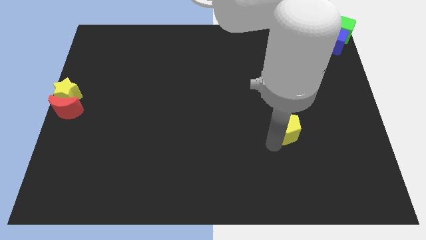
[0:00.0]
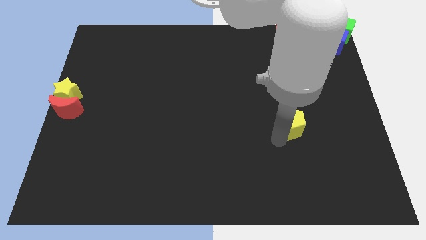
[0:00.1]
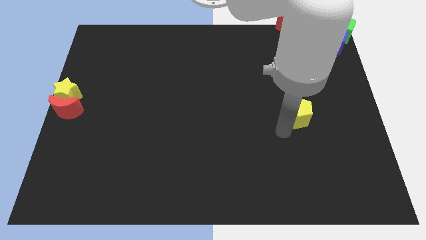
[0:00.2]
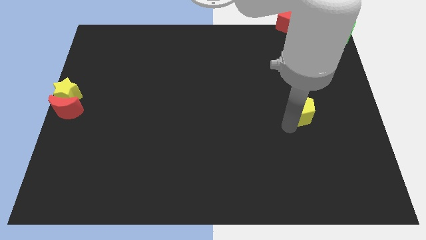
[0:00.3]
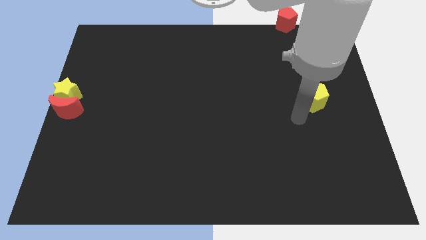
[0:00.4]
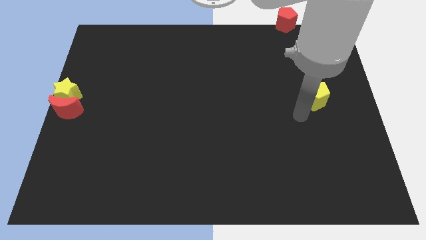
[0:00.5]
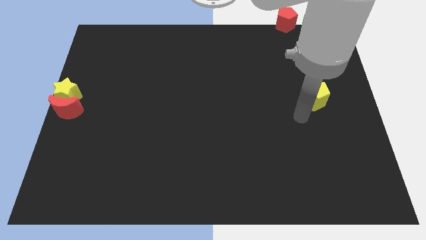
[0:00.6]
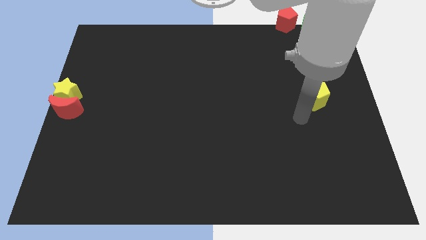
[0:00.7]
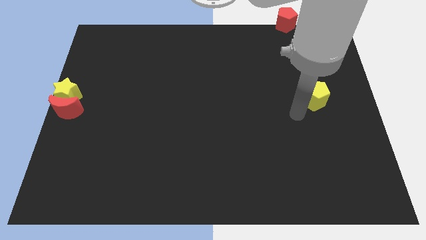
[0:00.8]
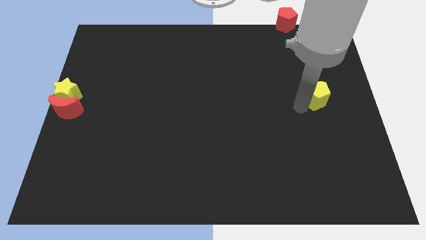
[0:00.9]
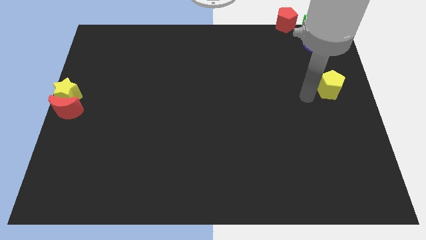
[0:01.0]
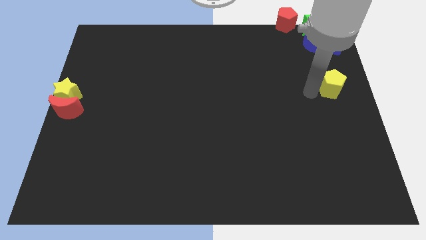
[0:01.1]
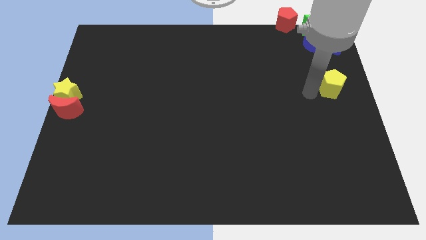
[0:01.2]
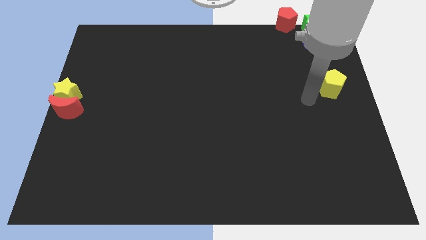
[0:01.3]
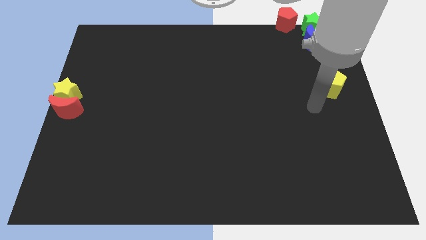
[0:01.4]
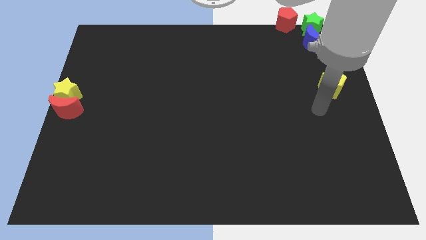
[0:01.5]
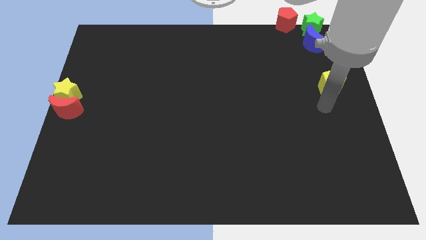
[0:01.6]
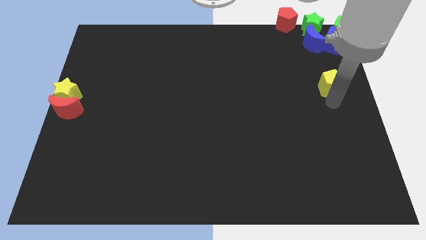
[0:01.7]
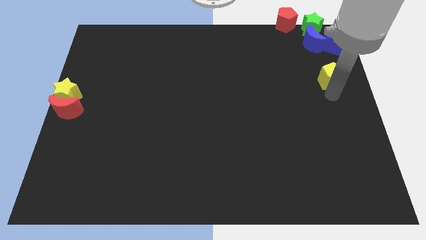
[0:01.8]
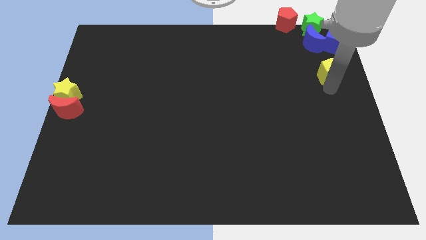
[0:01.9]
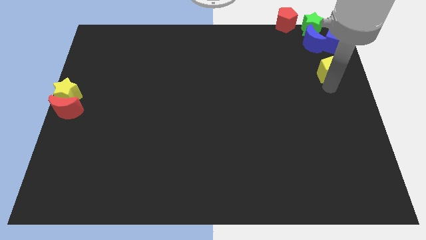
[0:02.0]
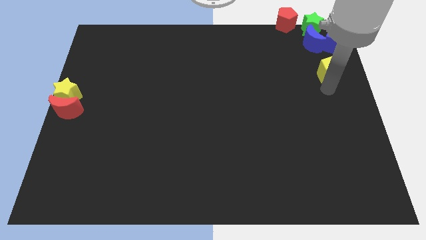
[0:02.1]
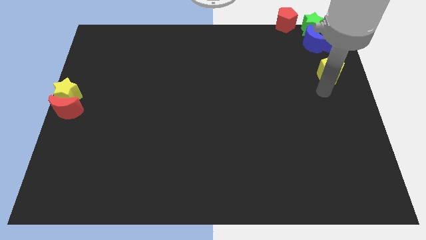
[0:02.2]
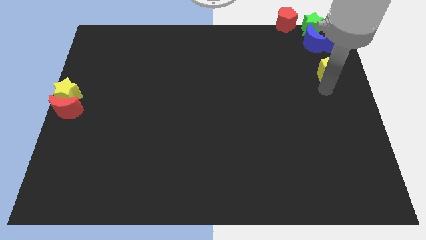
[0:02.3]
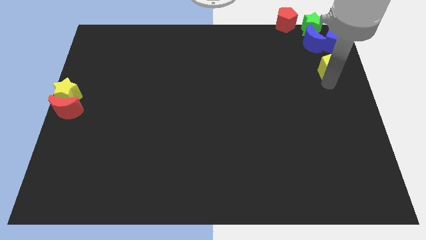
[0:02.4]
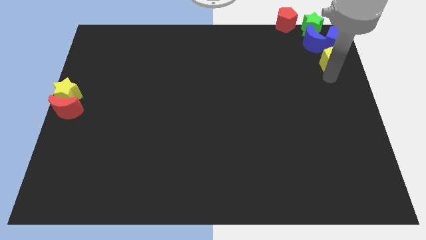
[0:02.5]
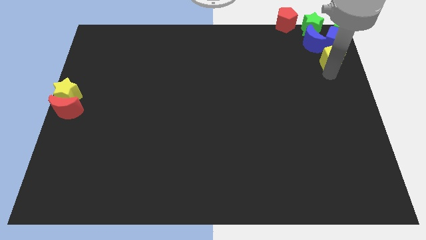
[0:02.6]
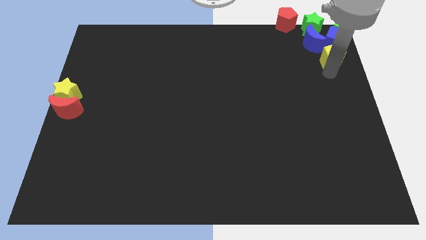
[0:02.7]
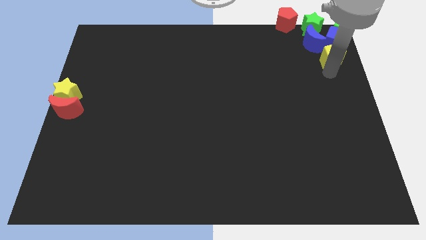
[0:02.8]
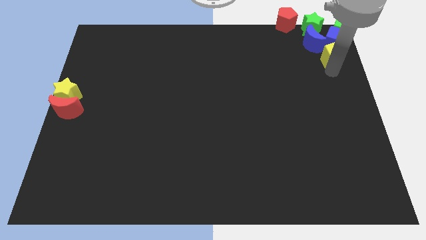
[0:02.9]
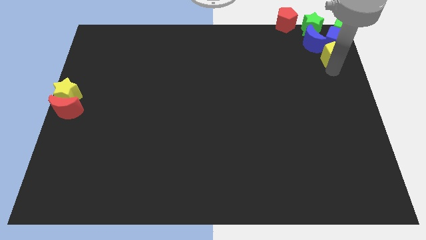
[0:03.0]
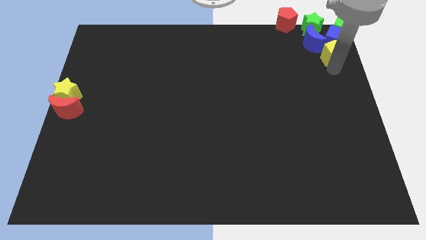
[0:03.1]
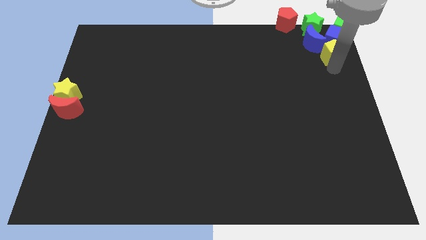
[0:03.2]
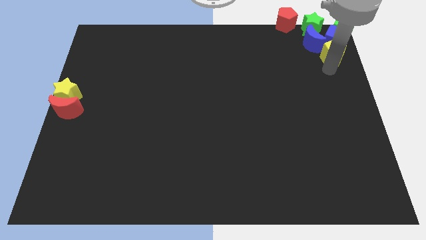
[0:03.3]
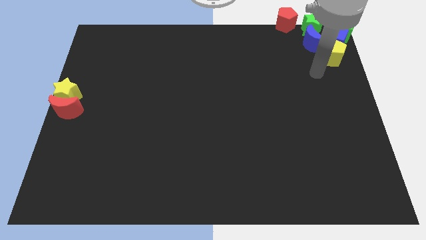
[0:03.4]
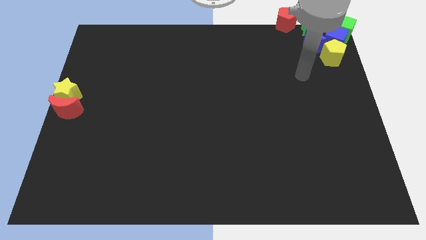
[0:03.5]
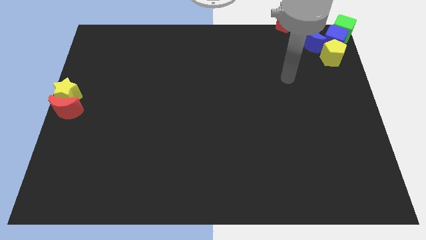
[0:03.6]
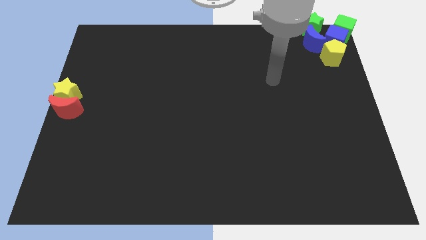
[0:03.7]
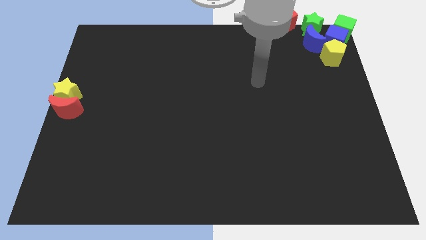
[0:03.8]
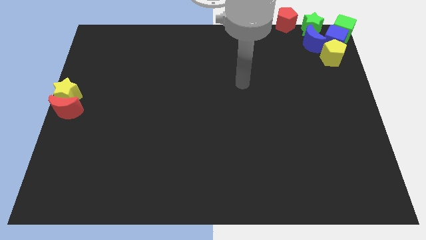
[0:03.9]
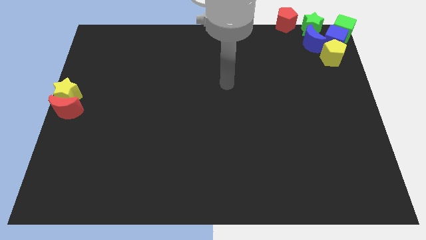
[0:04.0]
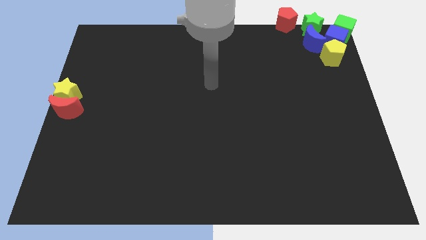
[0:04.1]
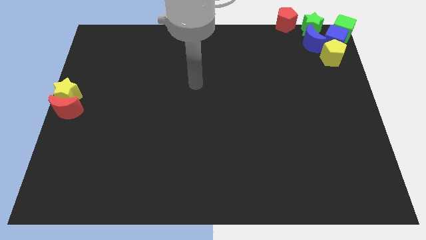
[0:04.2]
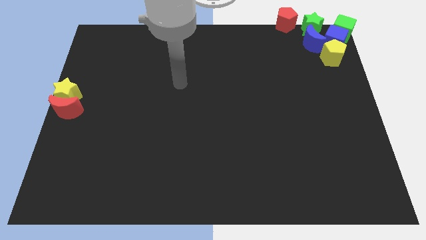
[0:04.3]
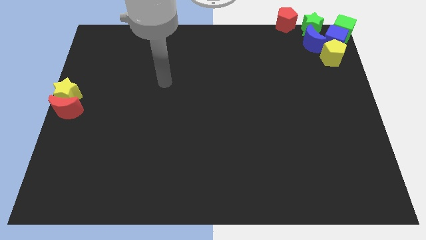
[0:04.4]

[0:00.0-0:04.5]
push the yellow pentagon slightly into the blue cube

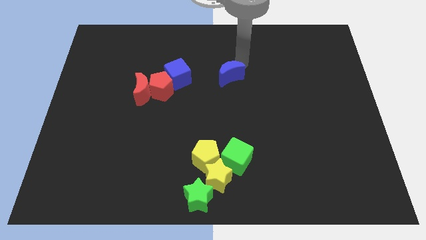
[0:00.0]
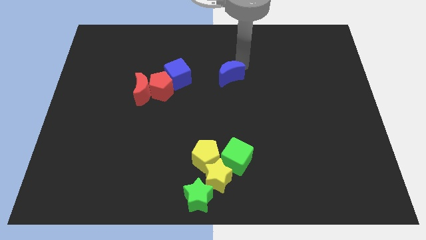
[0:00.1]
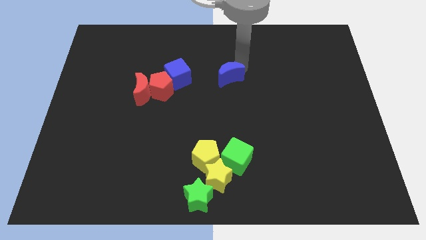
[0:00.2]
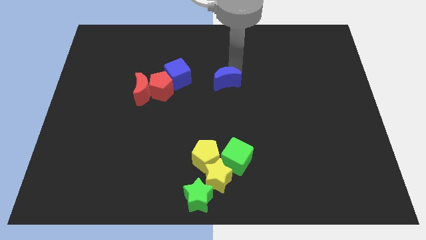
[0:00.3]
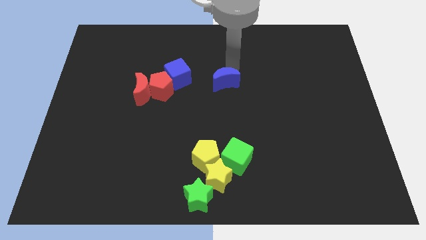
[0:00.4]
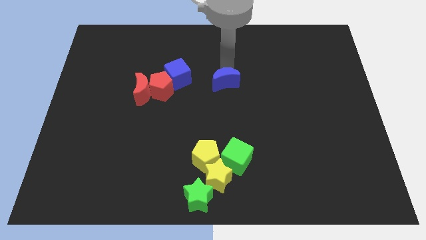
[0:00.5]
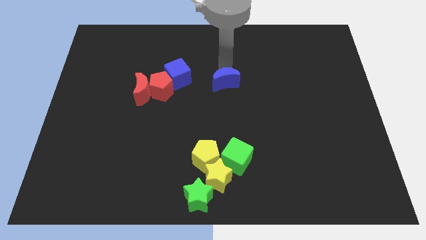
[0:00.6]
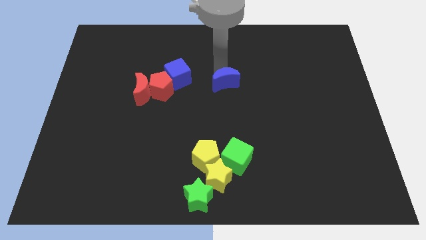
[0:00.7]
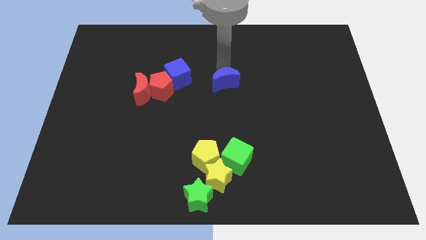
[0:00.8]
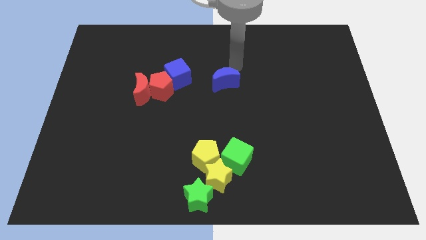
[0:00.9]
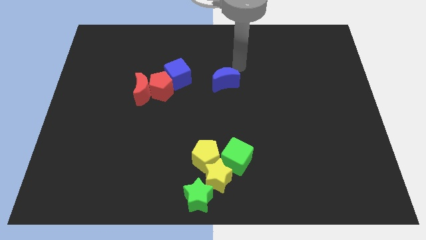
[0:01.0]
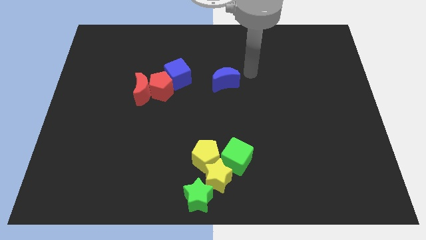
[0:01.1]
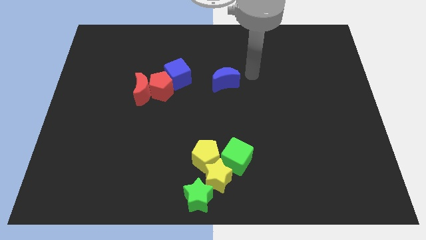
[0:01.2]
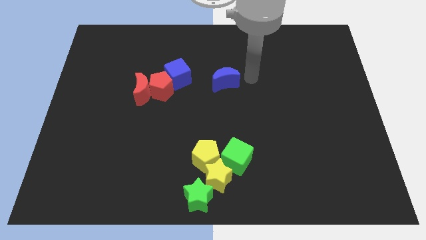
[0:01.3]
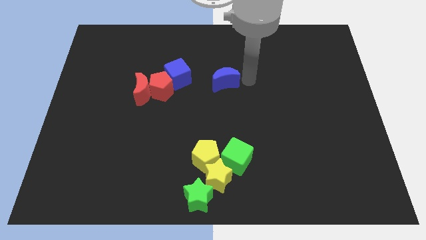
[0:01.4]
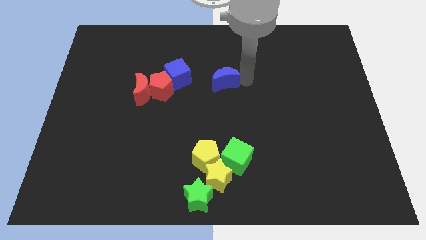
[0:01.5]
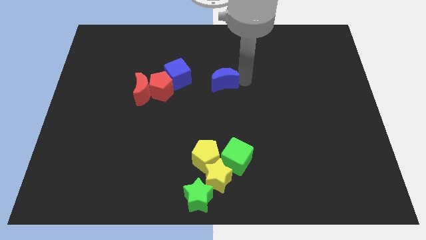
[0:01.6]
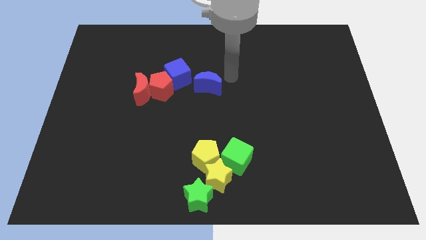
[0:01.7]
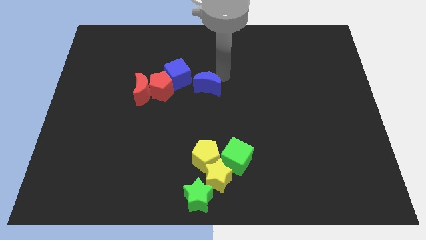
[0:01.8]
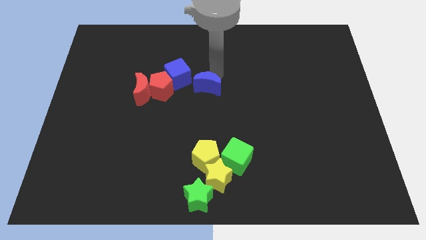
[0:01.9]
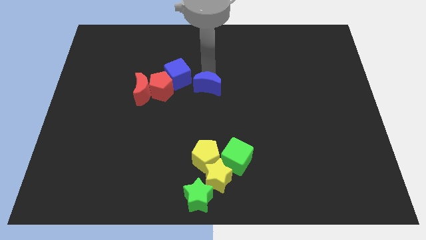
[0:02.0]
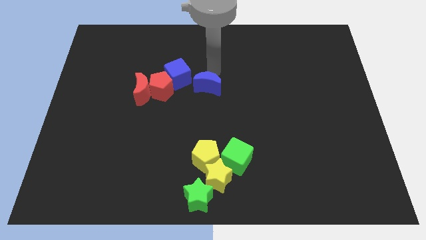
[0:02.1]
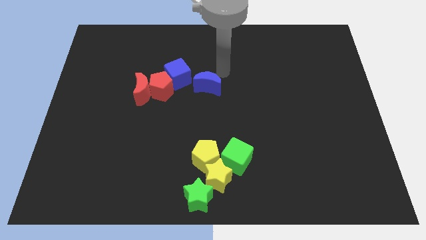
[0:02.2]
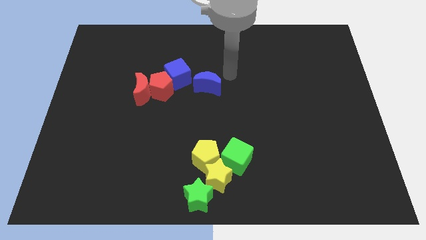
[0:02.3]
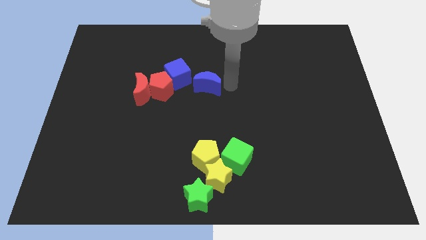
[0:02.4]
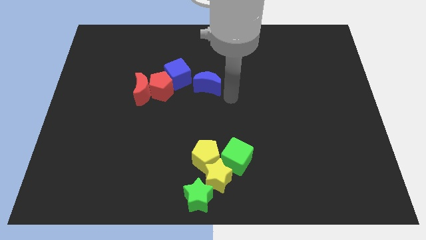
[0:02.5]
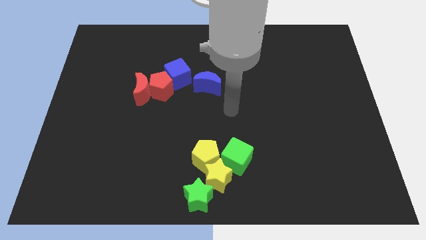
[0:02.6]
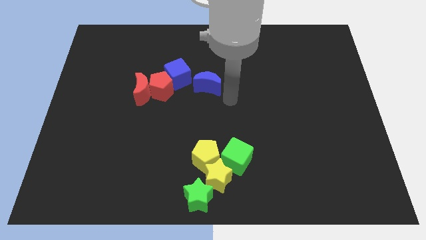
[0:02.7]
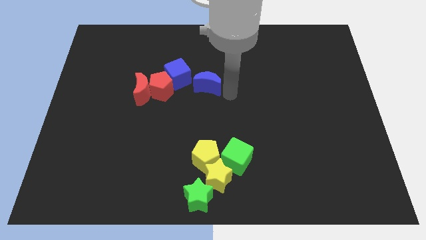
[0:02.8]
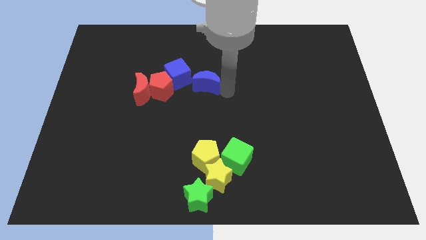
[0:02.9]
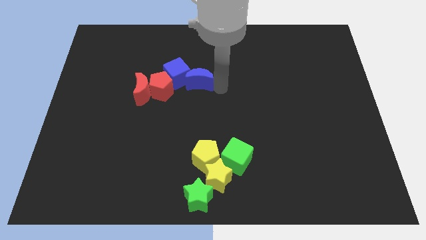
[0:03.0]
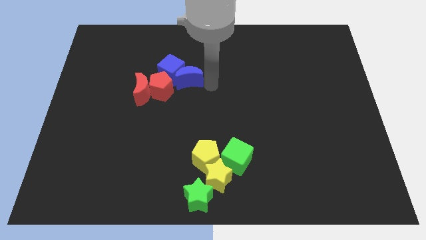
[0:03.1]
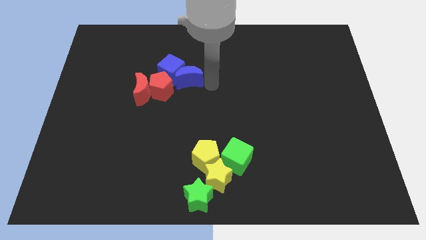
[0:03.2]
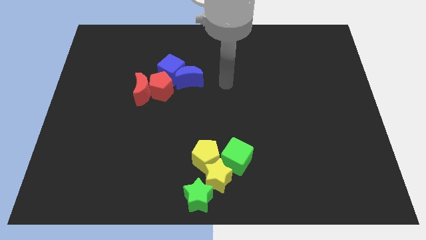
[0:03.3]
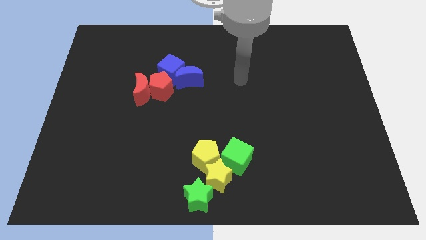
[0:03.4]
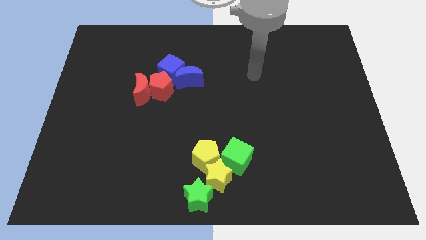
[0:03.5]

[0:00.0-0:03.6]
push the blue crescent into blue cube

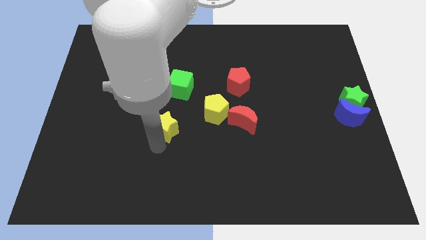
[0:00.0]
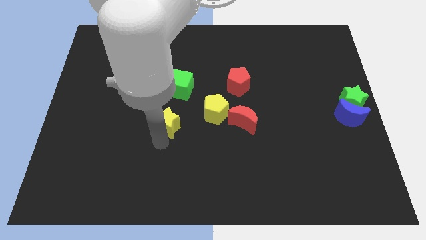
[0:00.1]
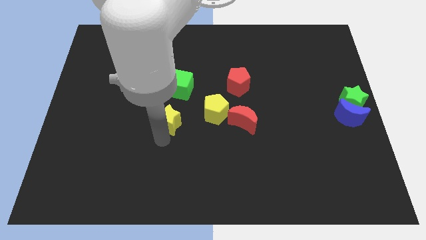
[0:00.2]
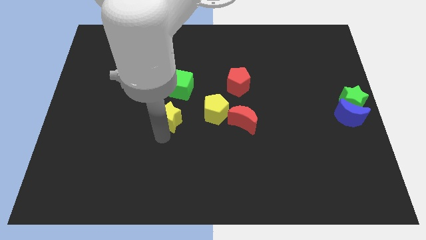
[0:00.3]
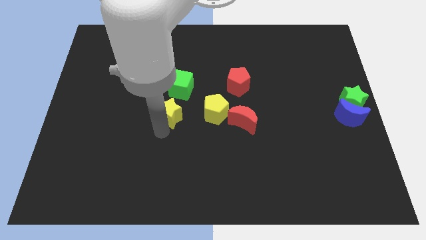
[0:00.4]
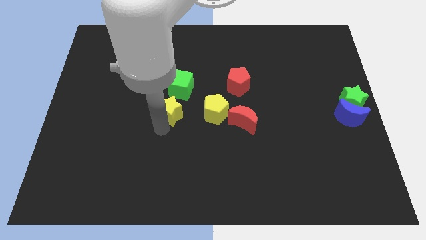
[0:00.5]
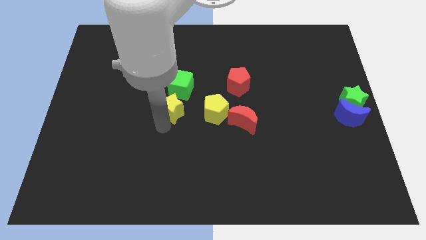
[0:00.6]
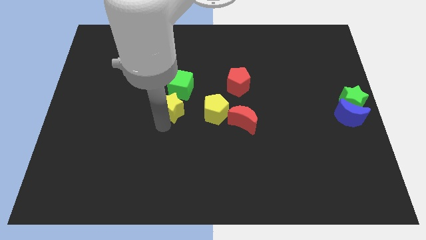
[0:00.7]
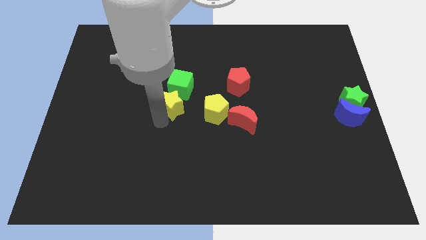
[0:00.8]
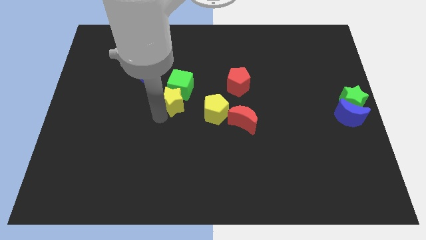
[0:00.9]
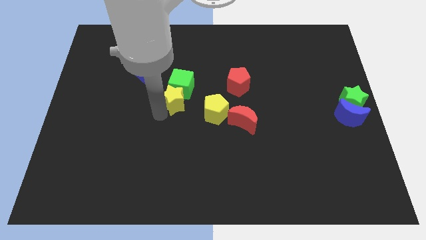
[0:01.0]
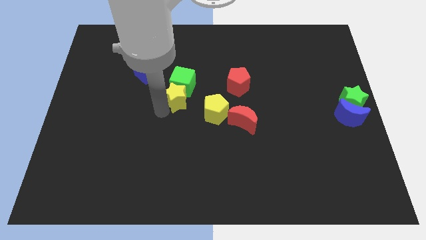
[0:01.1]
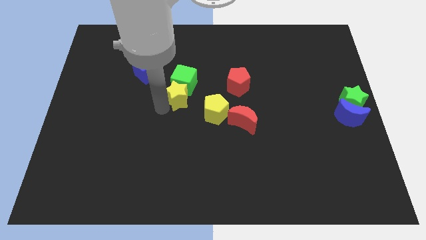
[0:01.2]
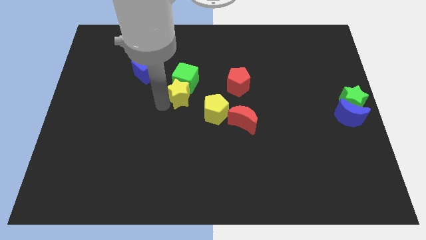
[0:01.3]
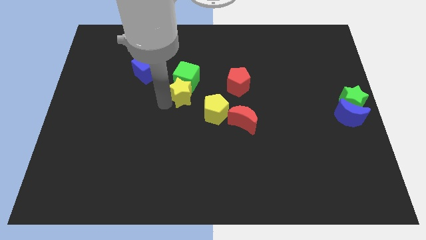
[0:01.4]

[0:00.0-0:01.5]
slide the yellow star into the green cube
